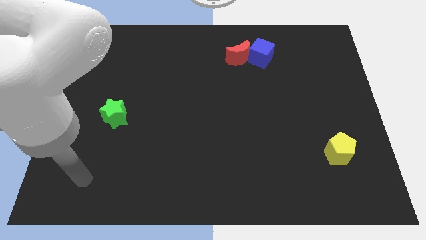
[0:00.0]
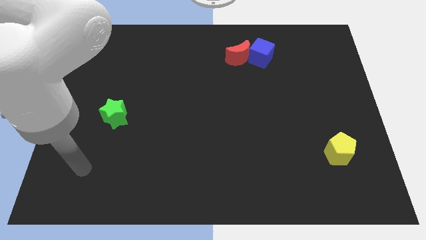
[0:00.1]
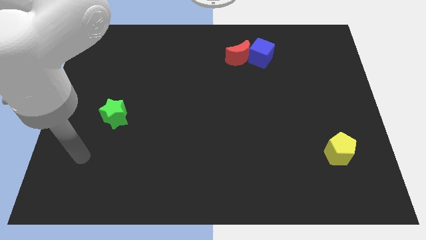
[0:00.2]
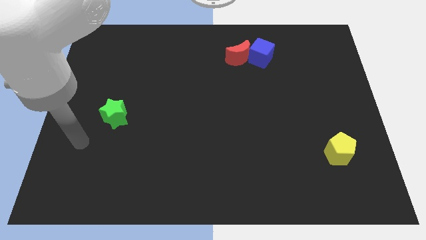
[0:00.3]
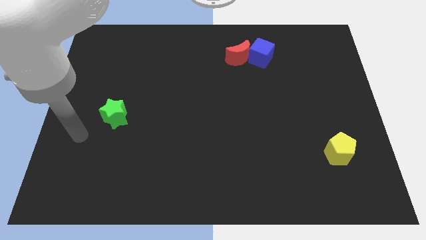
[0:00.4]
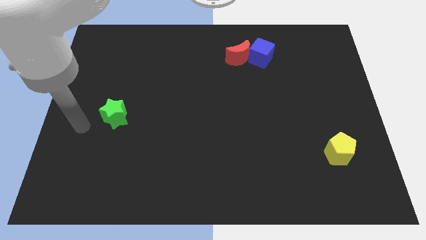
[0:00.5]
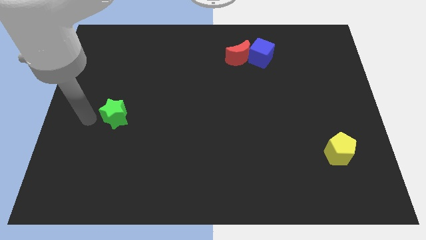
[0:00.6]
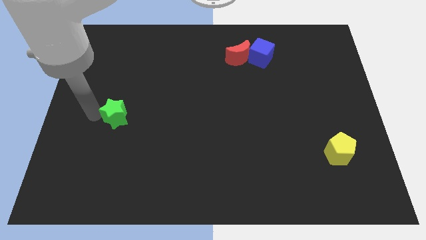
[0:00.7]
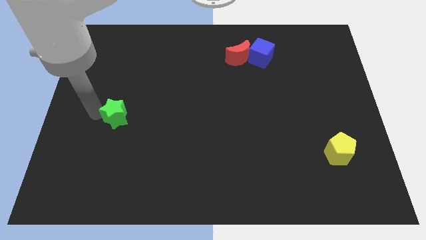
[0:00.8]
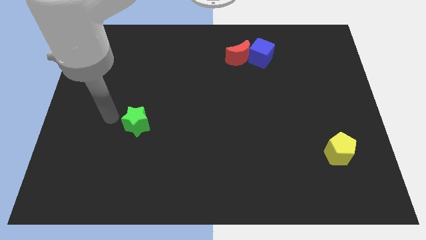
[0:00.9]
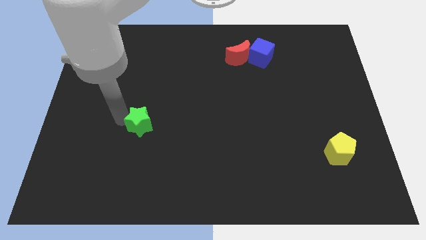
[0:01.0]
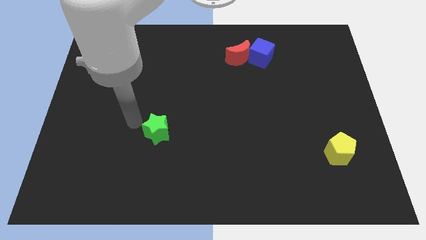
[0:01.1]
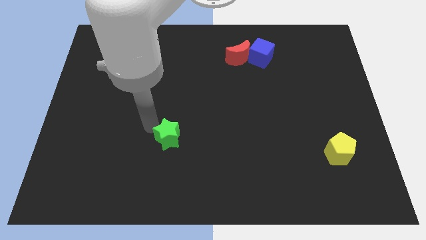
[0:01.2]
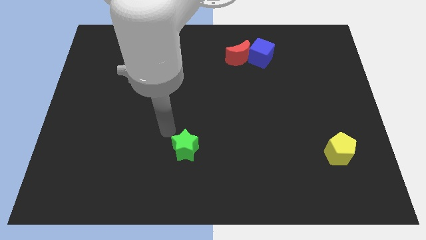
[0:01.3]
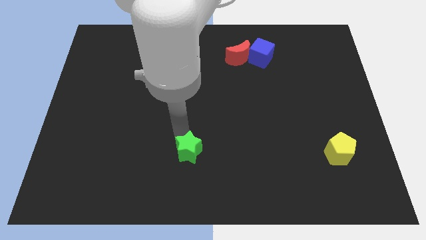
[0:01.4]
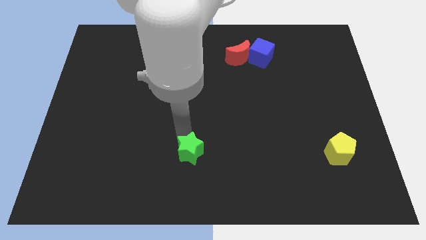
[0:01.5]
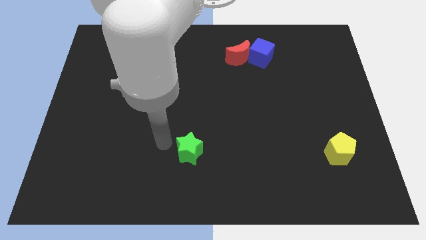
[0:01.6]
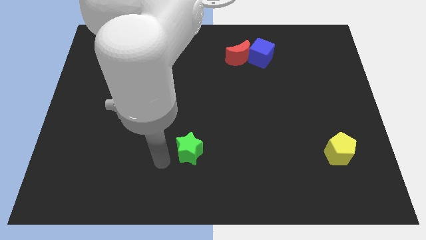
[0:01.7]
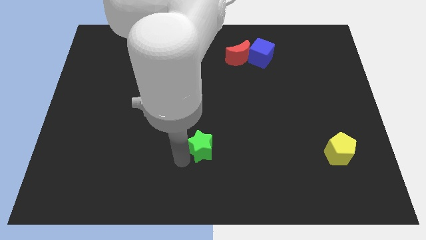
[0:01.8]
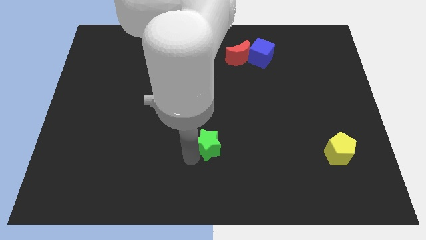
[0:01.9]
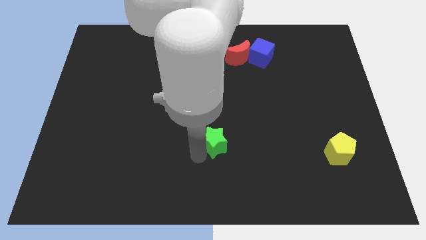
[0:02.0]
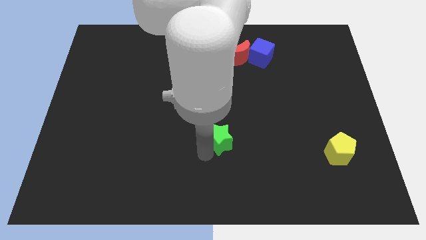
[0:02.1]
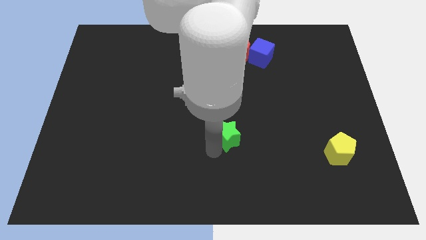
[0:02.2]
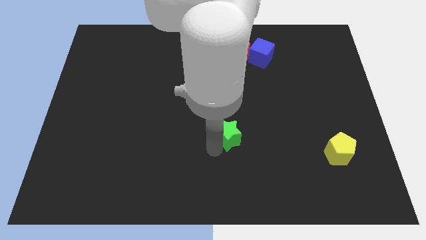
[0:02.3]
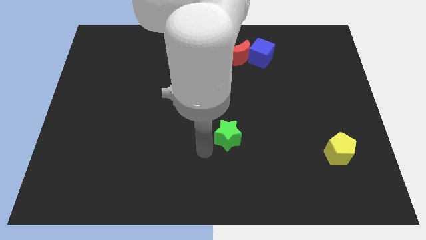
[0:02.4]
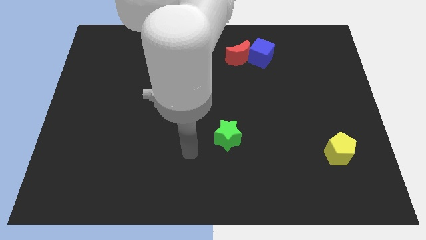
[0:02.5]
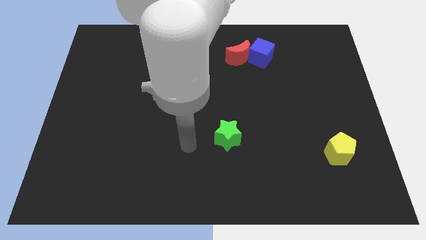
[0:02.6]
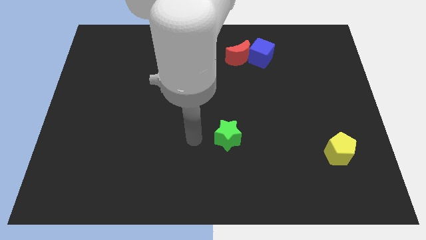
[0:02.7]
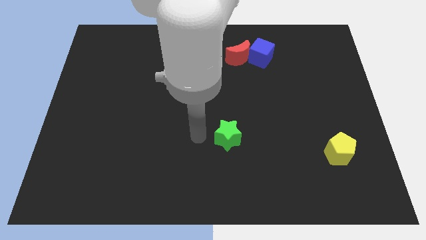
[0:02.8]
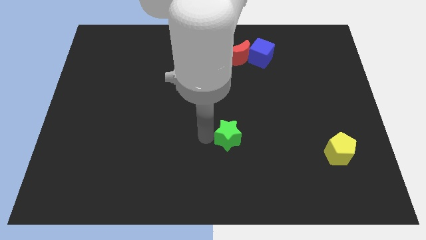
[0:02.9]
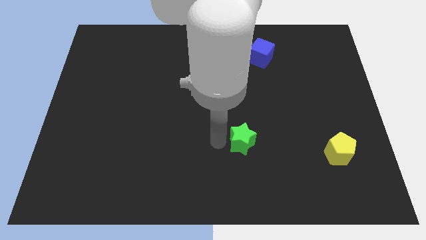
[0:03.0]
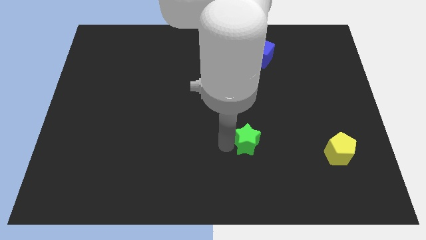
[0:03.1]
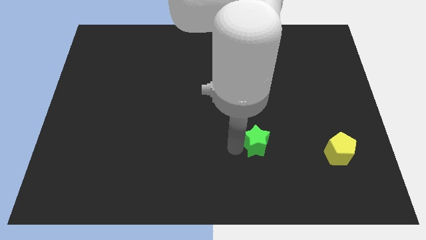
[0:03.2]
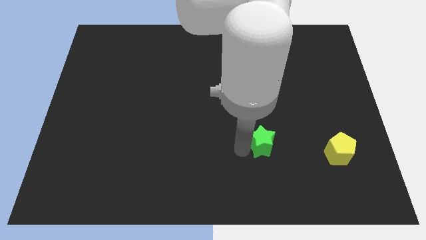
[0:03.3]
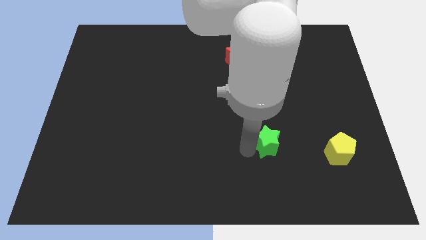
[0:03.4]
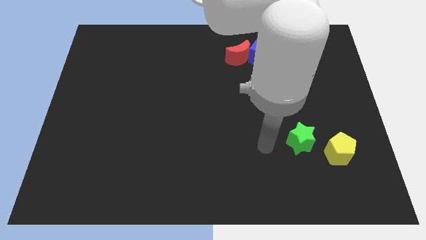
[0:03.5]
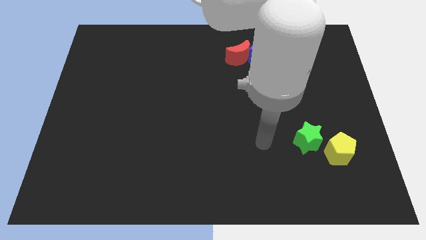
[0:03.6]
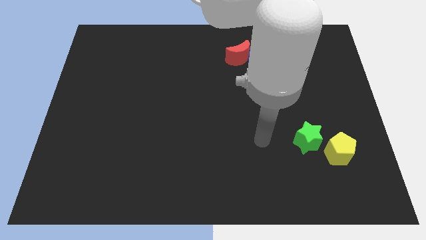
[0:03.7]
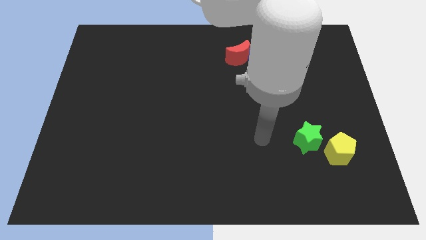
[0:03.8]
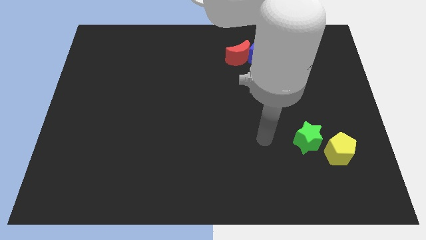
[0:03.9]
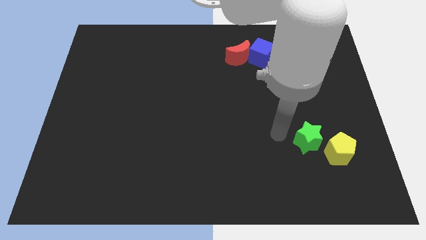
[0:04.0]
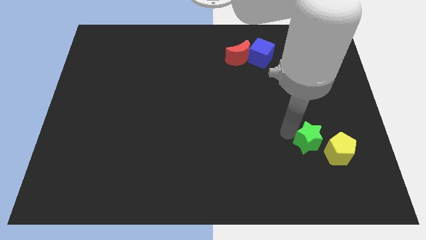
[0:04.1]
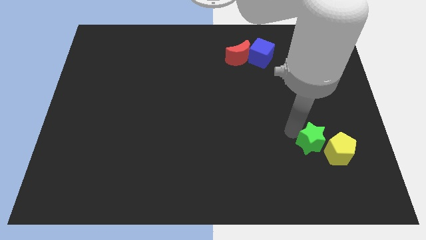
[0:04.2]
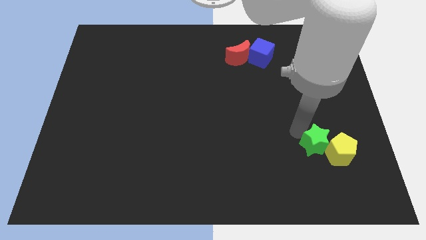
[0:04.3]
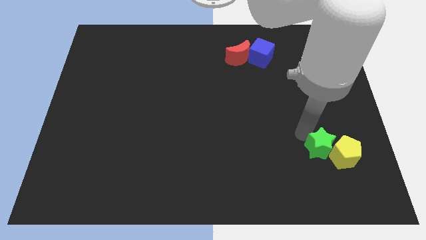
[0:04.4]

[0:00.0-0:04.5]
put the star towards the yellow block

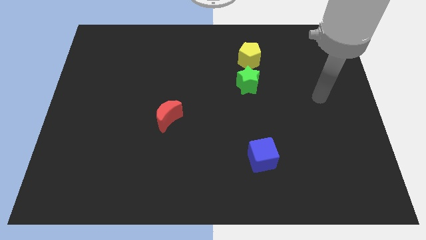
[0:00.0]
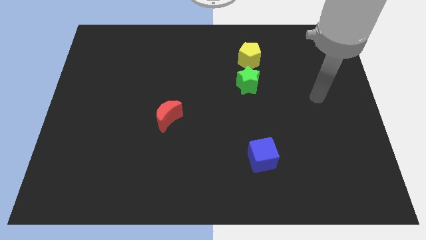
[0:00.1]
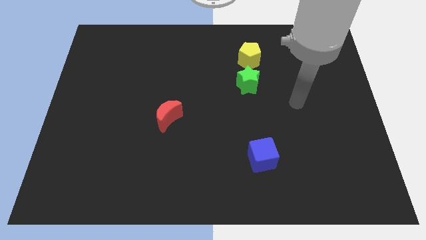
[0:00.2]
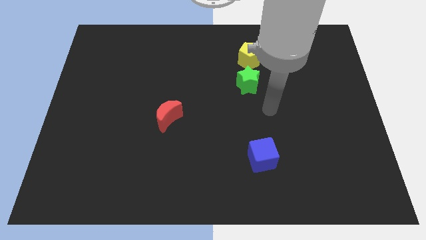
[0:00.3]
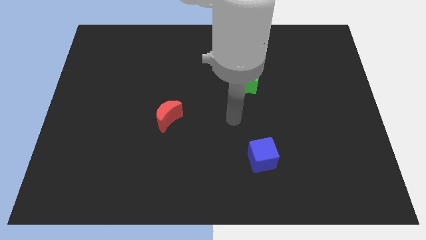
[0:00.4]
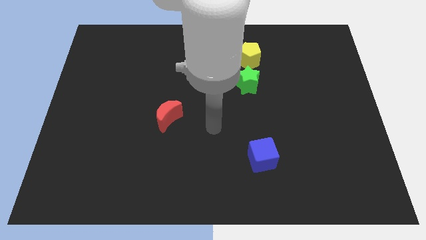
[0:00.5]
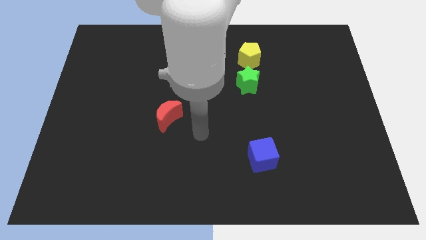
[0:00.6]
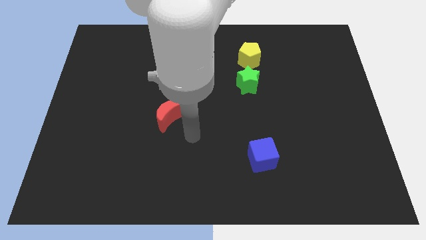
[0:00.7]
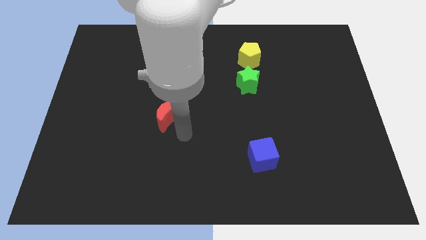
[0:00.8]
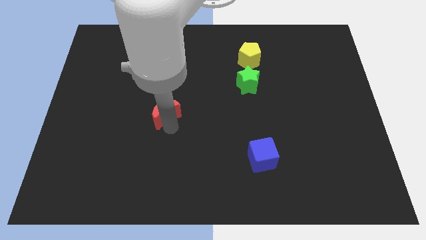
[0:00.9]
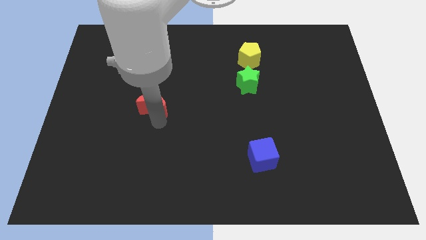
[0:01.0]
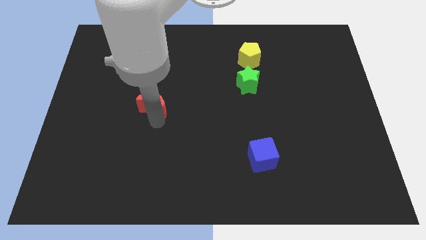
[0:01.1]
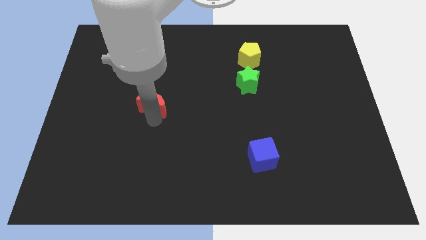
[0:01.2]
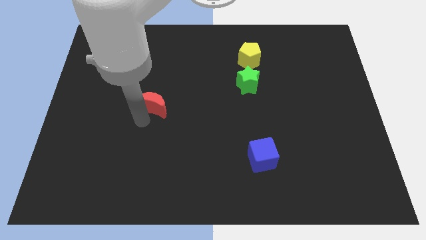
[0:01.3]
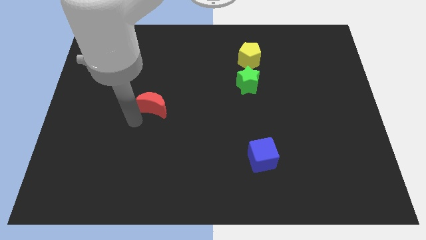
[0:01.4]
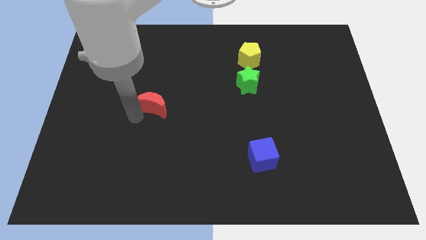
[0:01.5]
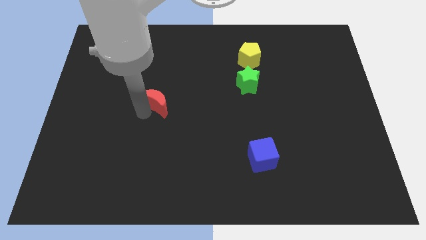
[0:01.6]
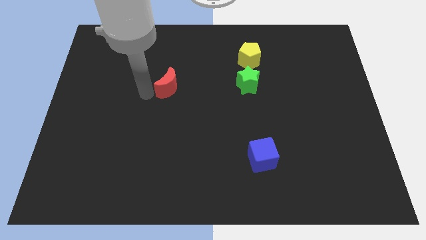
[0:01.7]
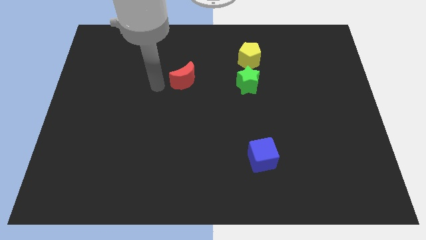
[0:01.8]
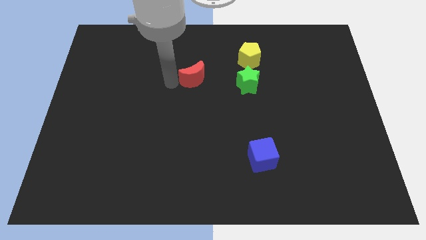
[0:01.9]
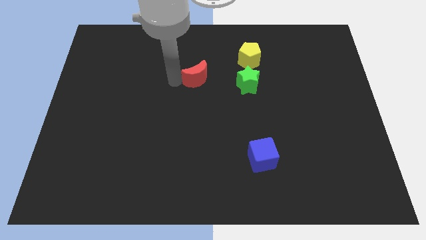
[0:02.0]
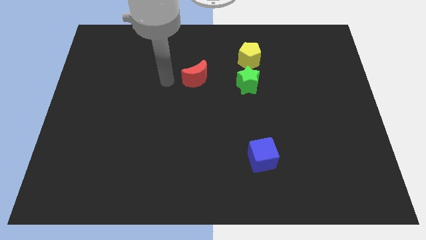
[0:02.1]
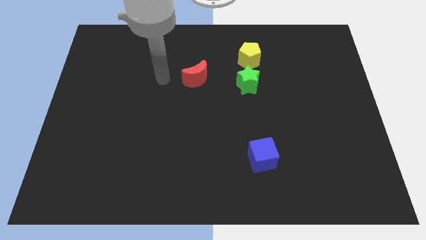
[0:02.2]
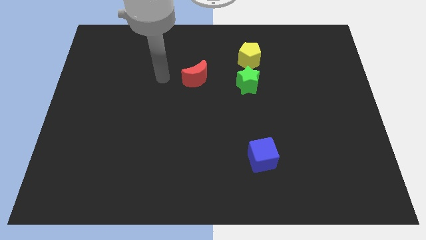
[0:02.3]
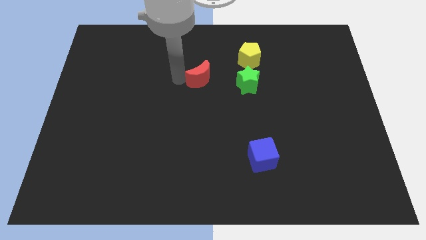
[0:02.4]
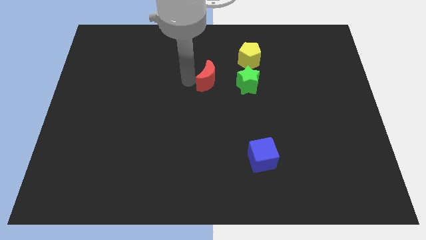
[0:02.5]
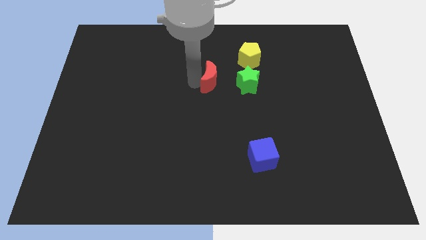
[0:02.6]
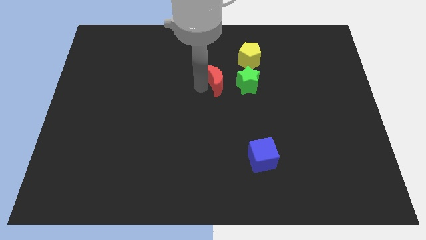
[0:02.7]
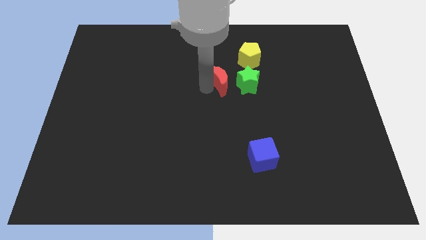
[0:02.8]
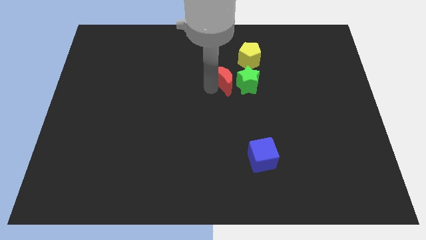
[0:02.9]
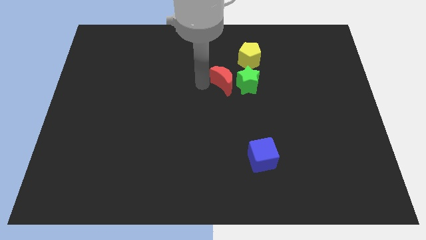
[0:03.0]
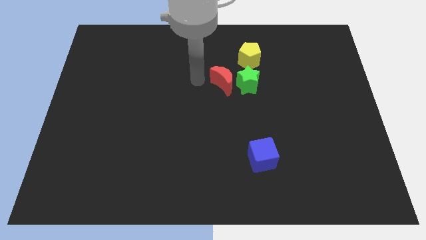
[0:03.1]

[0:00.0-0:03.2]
push the red block towards the star

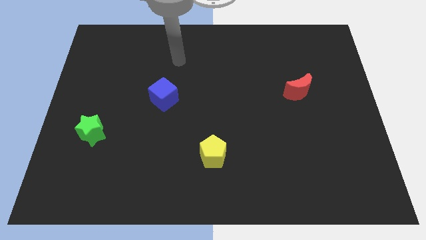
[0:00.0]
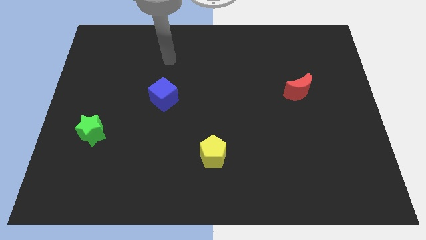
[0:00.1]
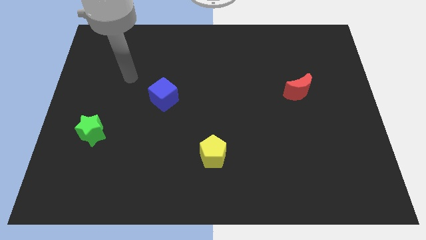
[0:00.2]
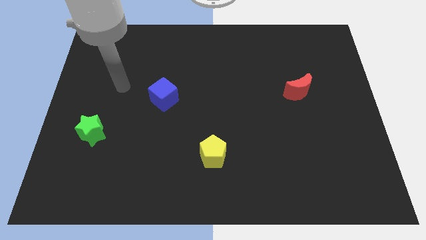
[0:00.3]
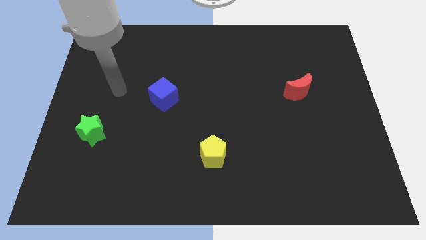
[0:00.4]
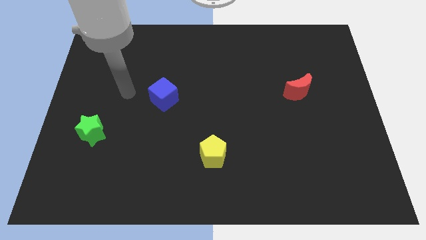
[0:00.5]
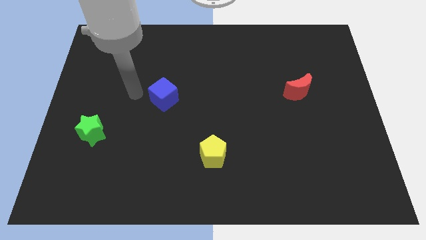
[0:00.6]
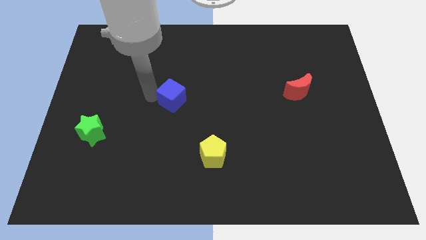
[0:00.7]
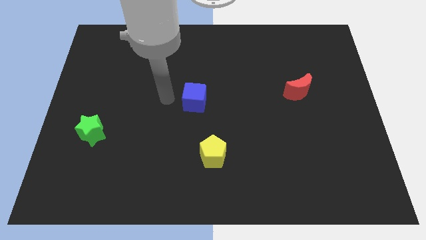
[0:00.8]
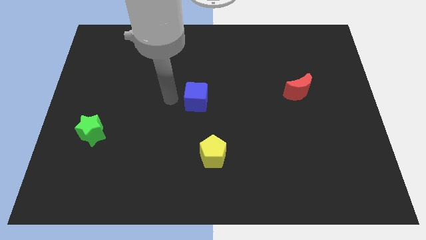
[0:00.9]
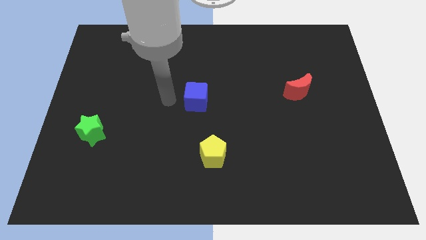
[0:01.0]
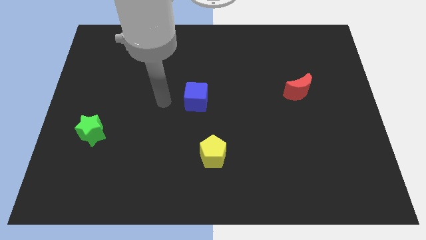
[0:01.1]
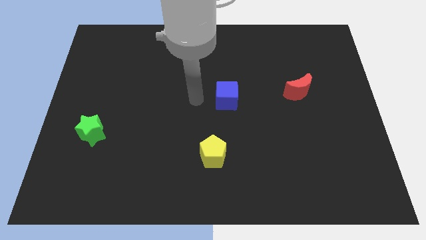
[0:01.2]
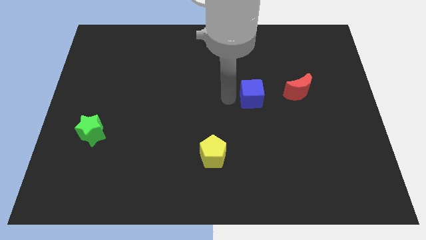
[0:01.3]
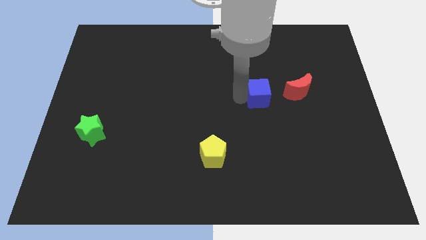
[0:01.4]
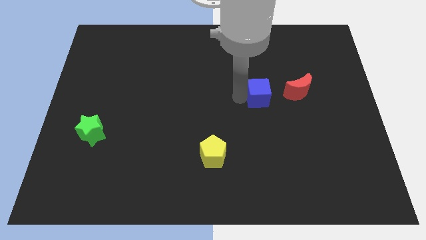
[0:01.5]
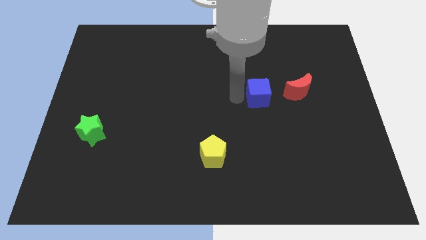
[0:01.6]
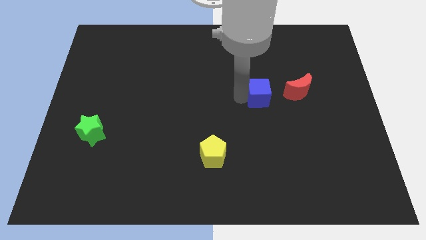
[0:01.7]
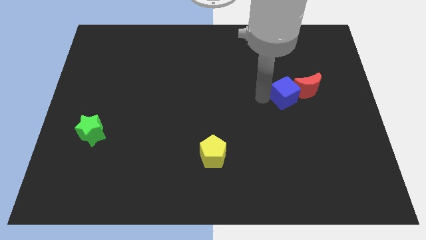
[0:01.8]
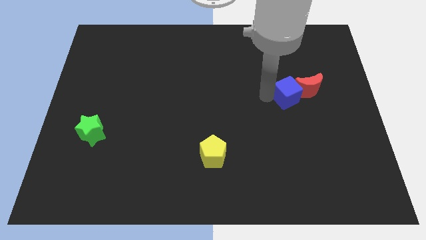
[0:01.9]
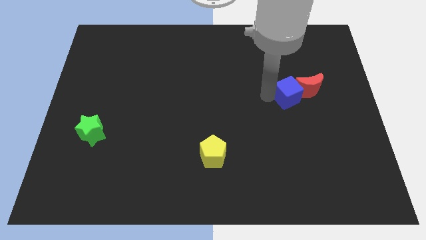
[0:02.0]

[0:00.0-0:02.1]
move the cube close to the moon
